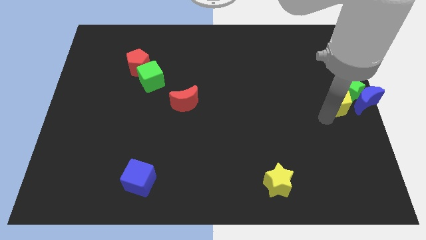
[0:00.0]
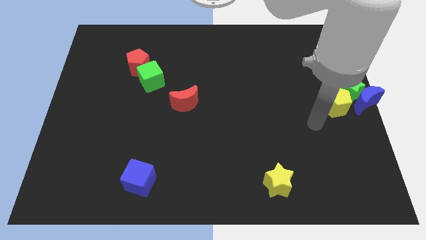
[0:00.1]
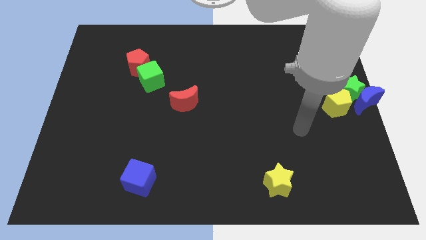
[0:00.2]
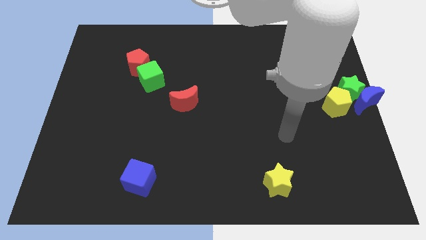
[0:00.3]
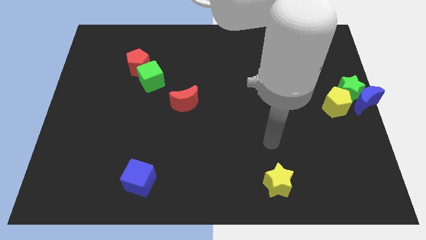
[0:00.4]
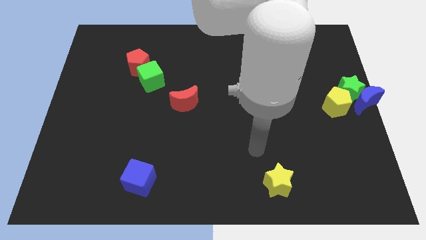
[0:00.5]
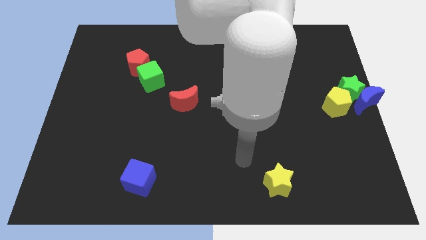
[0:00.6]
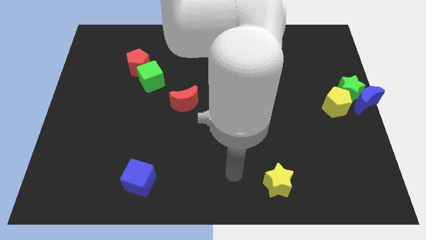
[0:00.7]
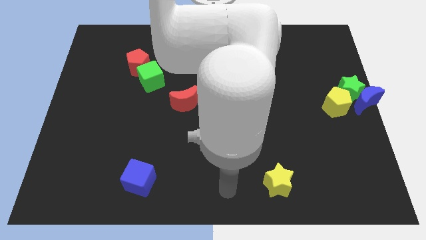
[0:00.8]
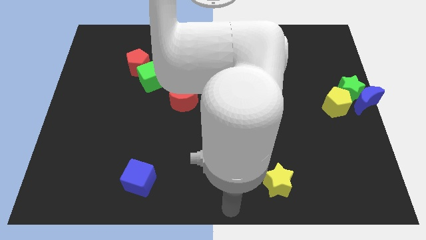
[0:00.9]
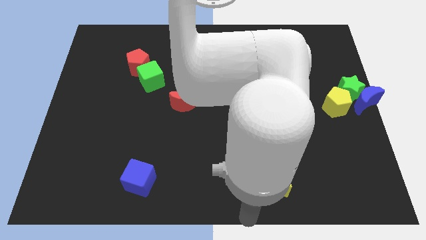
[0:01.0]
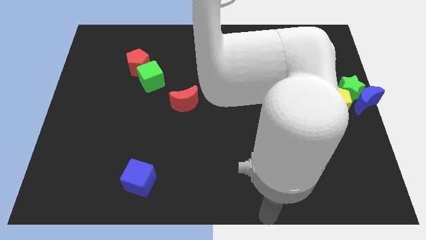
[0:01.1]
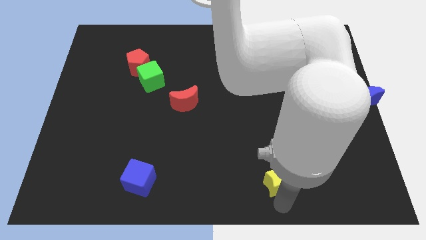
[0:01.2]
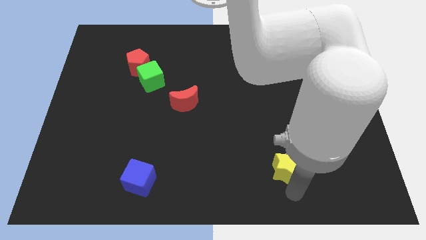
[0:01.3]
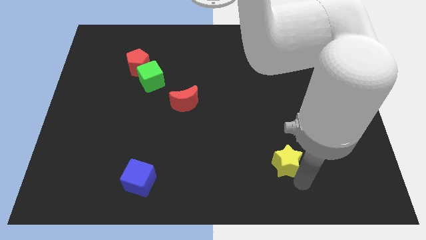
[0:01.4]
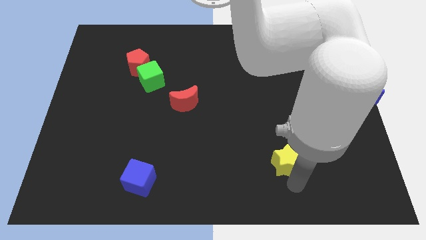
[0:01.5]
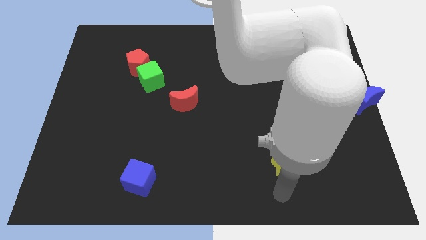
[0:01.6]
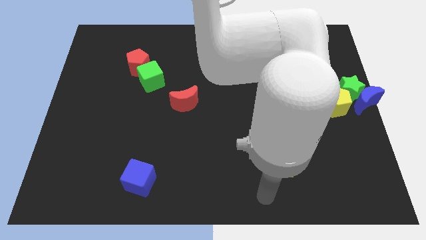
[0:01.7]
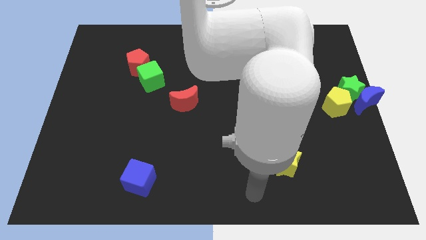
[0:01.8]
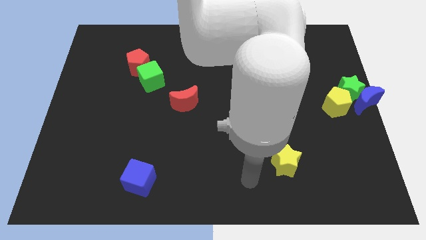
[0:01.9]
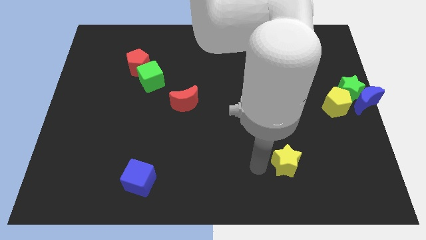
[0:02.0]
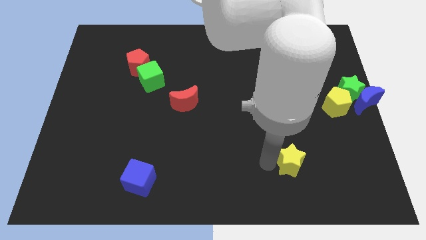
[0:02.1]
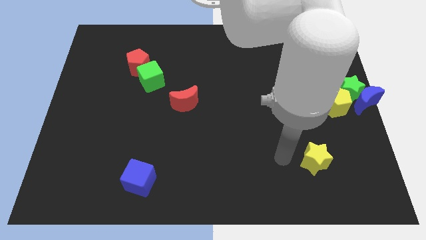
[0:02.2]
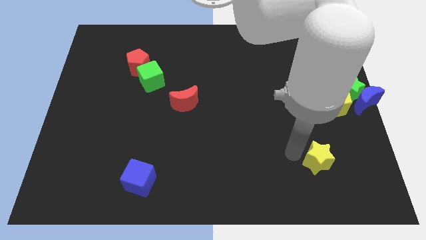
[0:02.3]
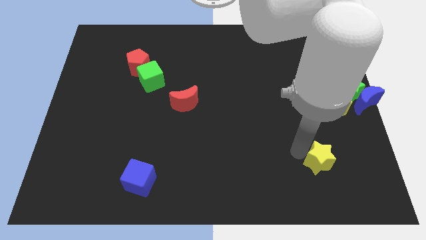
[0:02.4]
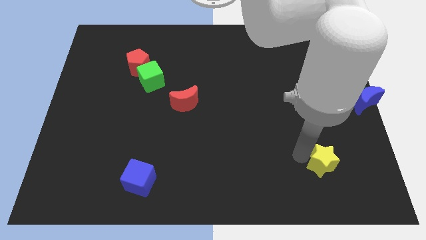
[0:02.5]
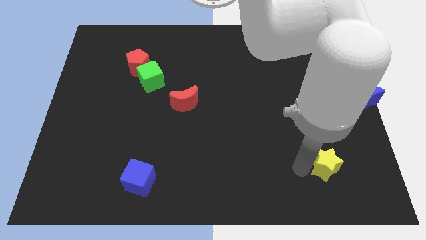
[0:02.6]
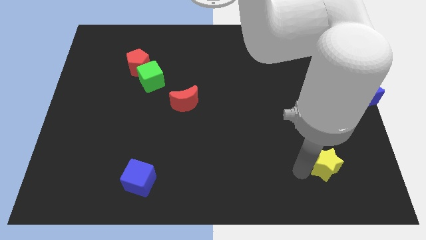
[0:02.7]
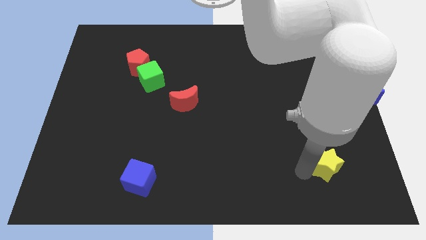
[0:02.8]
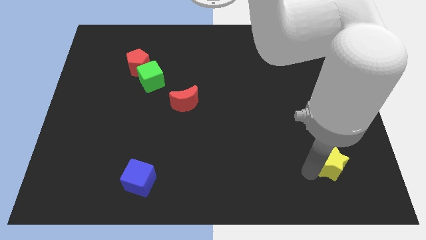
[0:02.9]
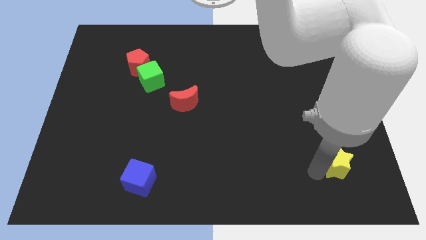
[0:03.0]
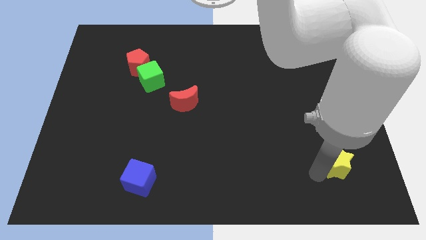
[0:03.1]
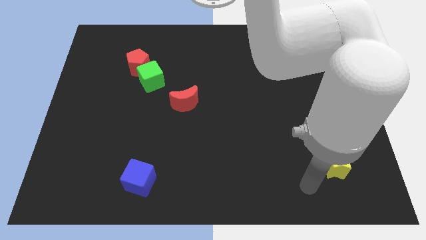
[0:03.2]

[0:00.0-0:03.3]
push yellow star towards the right side of the board

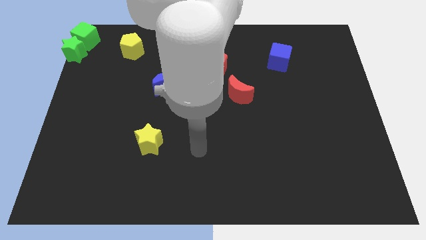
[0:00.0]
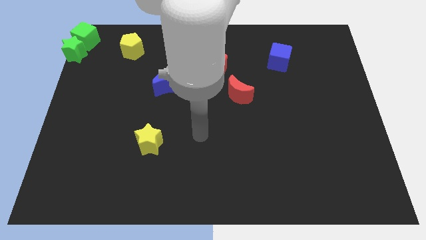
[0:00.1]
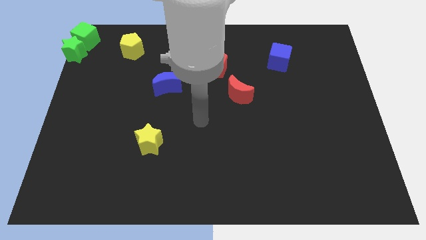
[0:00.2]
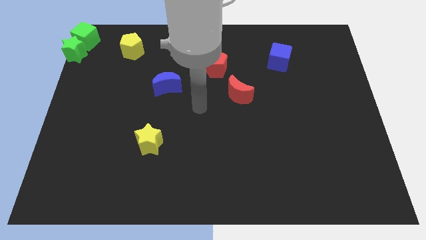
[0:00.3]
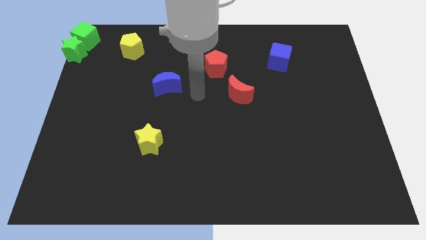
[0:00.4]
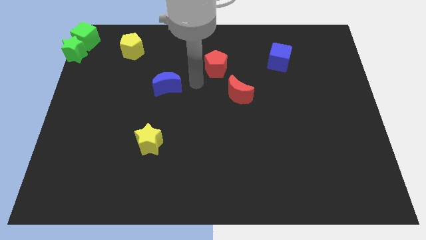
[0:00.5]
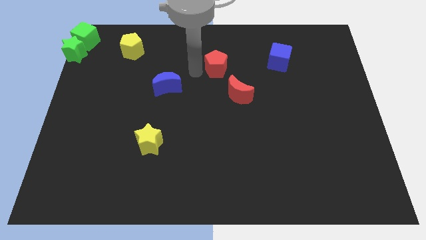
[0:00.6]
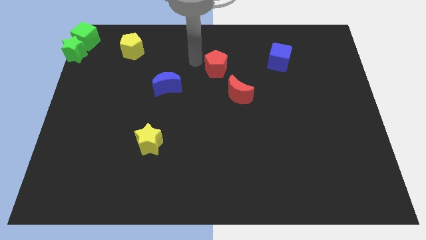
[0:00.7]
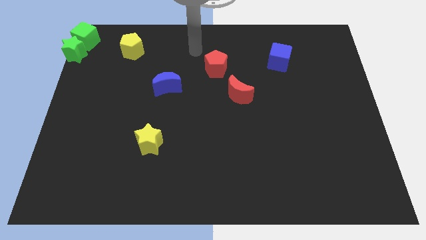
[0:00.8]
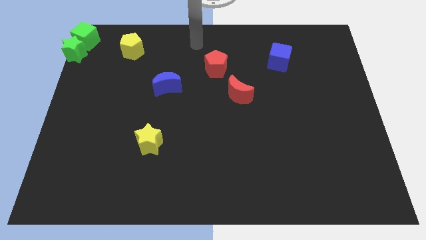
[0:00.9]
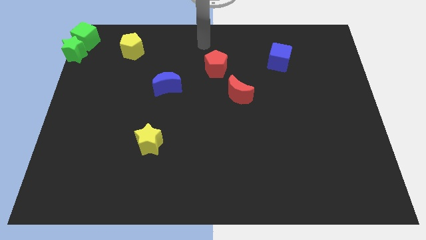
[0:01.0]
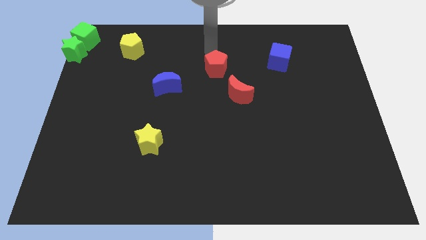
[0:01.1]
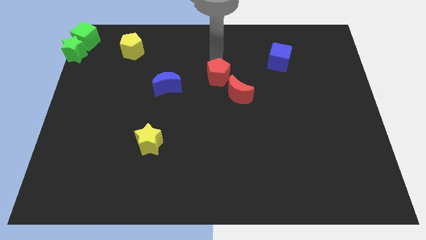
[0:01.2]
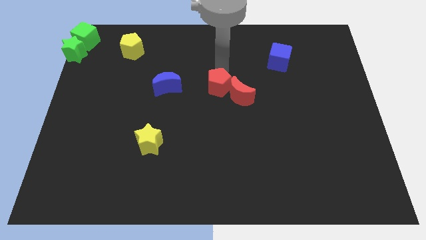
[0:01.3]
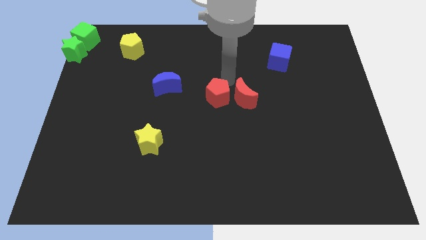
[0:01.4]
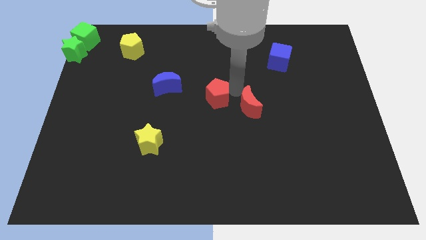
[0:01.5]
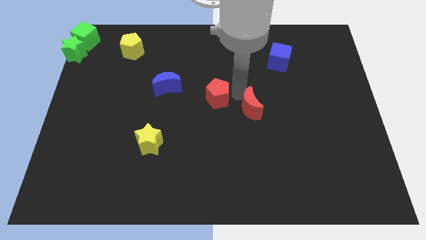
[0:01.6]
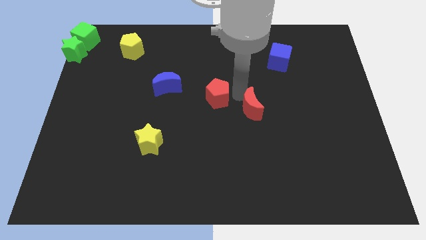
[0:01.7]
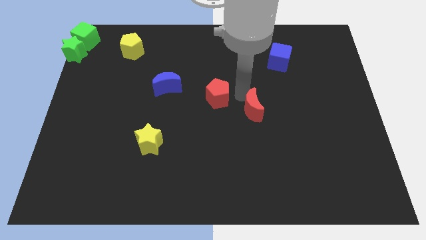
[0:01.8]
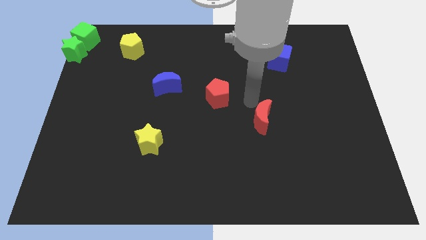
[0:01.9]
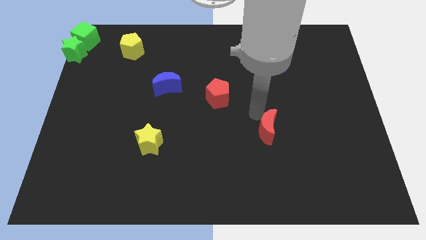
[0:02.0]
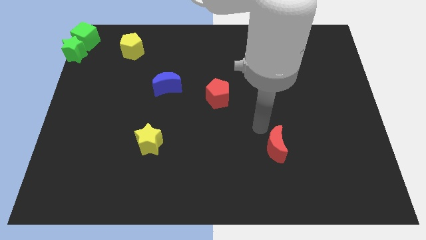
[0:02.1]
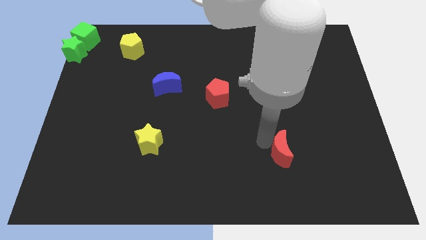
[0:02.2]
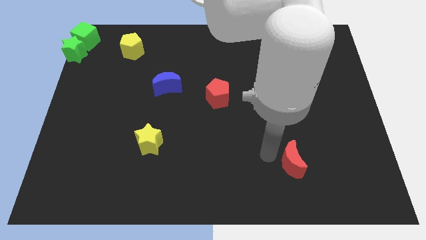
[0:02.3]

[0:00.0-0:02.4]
push red moon towards bottom right

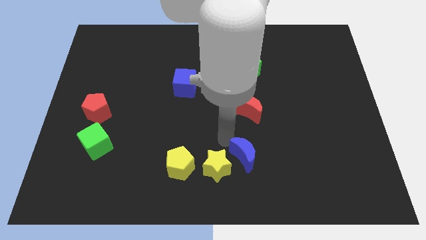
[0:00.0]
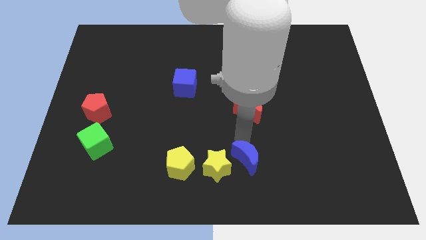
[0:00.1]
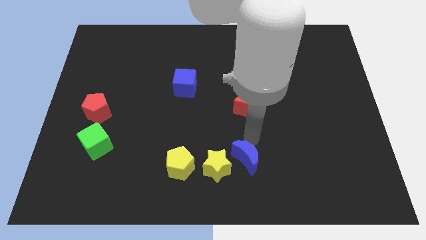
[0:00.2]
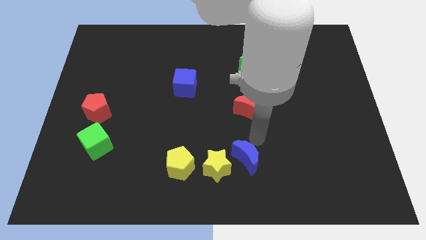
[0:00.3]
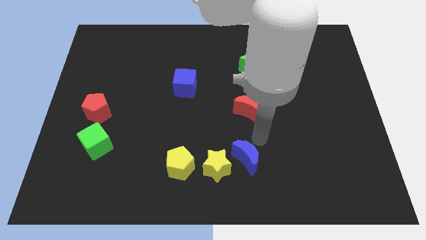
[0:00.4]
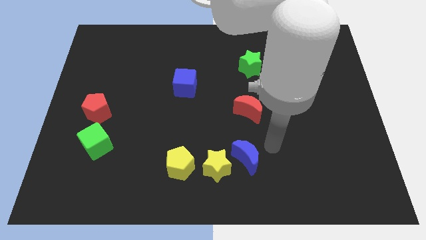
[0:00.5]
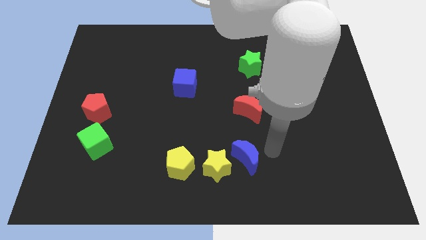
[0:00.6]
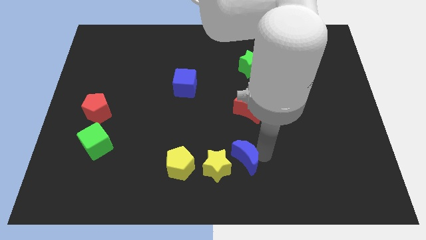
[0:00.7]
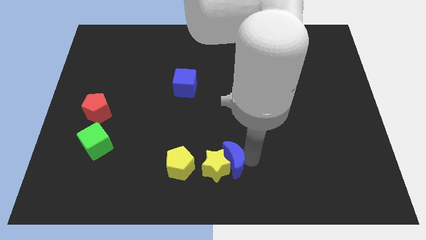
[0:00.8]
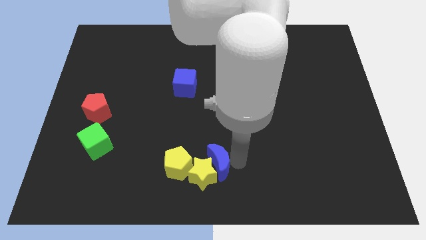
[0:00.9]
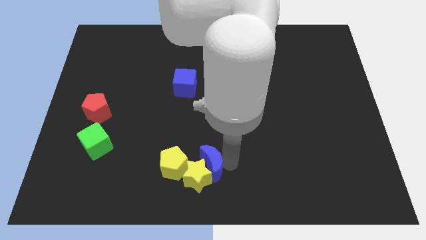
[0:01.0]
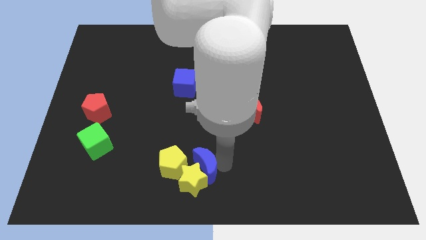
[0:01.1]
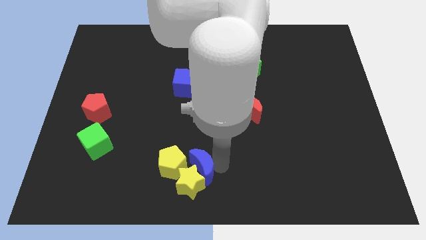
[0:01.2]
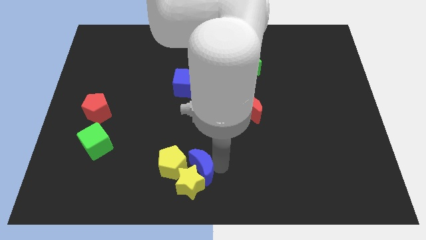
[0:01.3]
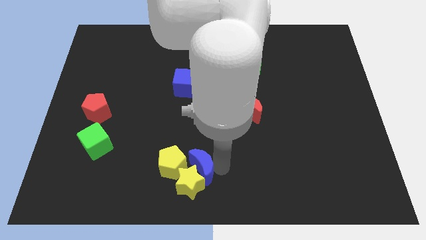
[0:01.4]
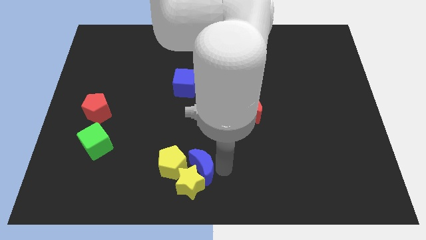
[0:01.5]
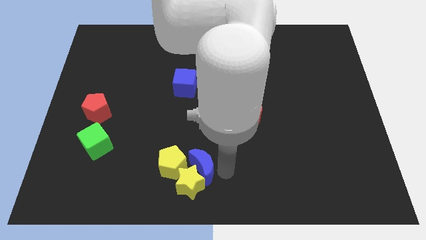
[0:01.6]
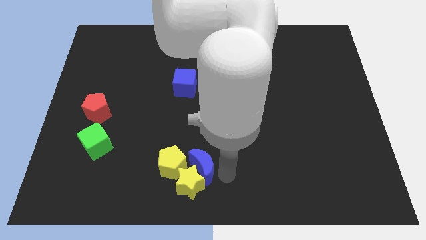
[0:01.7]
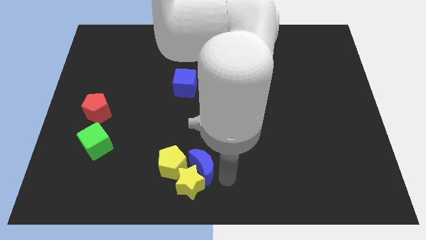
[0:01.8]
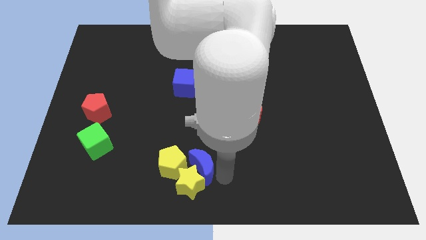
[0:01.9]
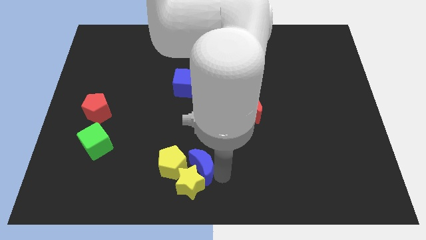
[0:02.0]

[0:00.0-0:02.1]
push the blue moon into the yellow star

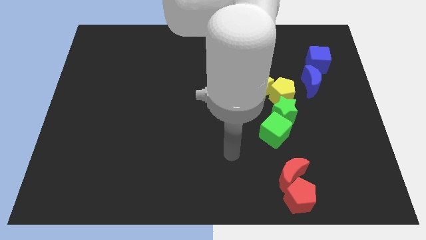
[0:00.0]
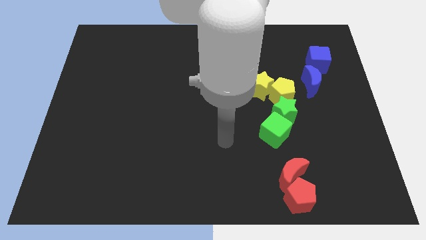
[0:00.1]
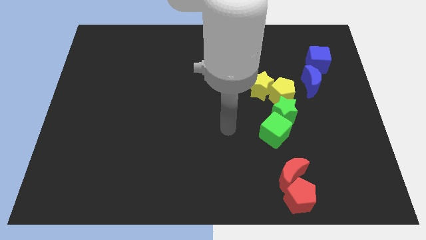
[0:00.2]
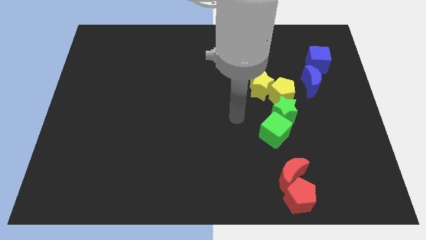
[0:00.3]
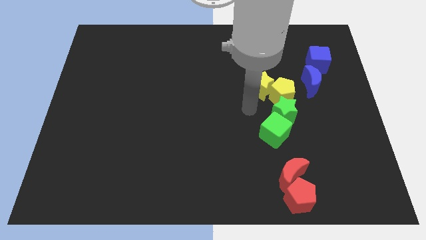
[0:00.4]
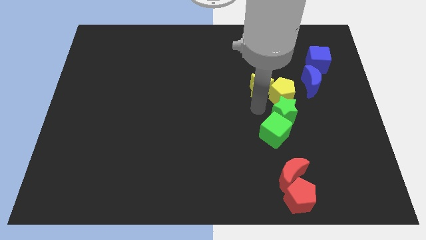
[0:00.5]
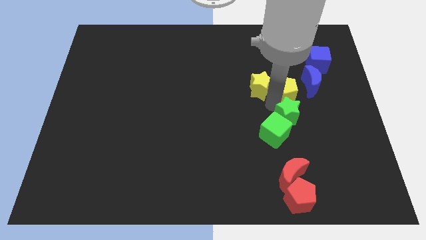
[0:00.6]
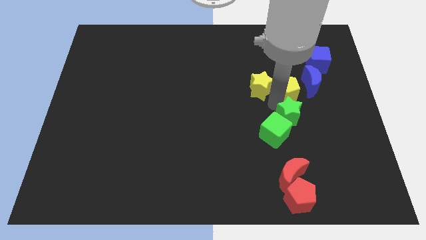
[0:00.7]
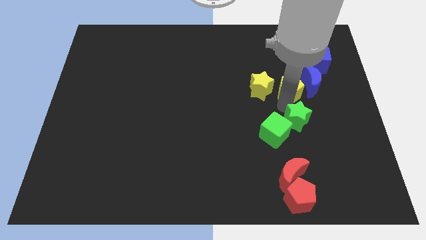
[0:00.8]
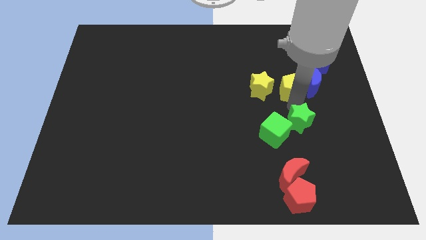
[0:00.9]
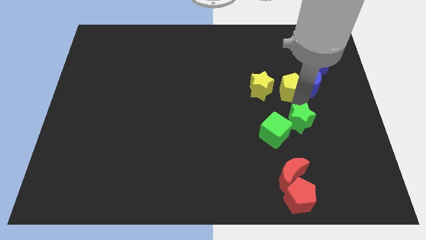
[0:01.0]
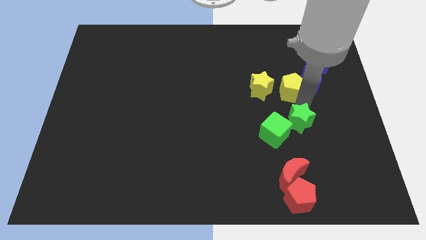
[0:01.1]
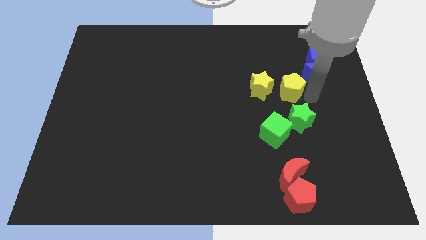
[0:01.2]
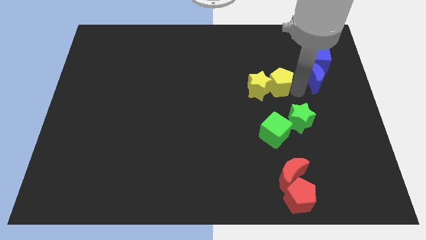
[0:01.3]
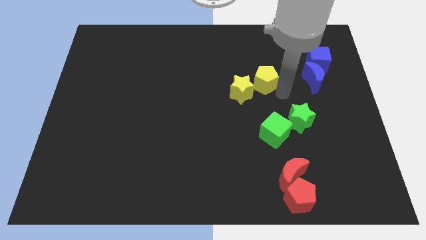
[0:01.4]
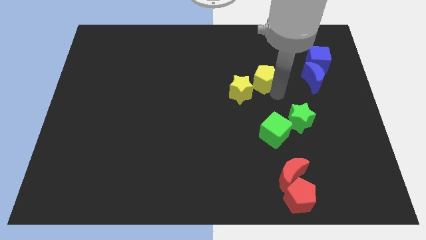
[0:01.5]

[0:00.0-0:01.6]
separate the green blocks from the yellow blocks
